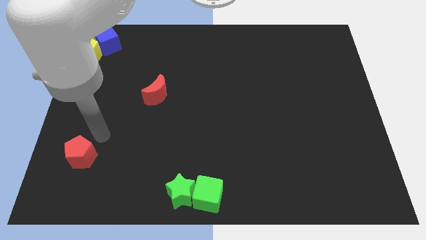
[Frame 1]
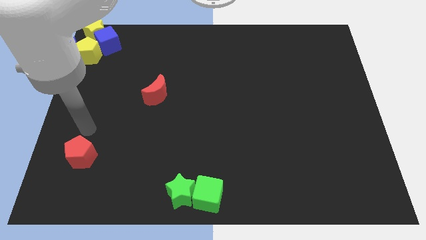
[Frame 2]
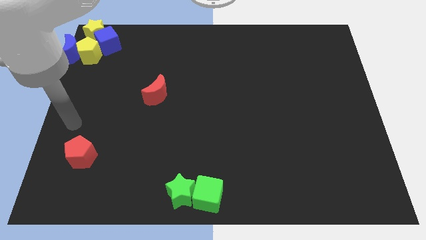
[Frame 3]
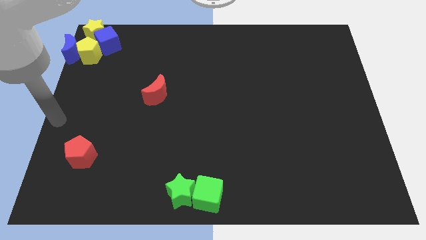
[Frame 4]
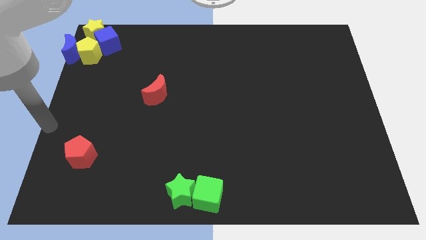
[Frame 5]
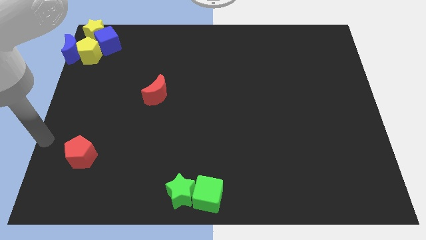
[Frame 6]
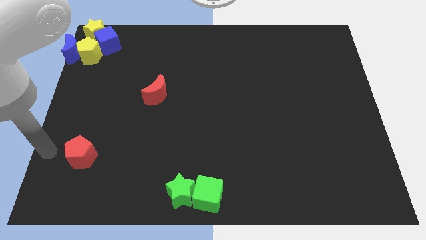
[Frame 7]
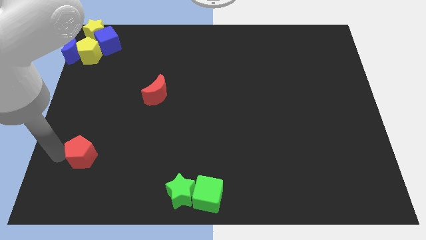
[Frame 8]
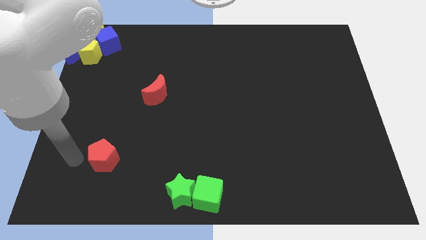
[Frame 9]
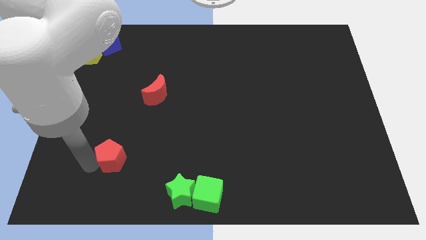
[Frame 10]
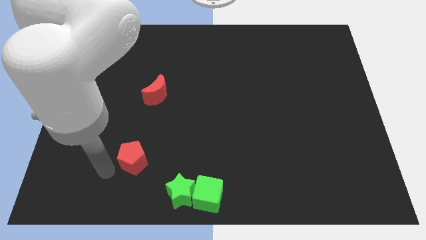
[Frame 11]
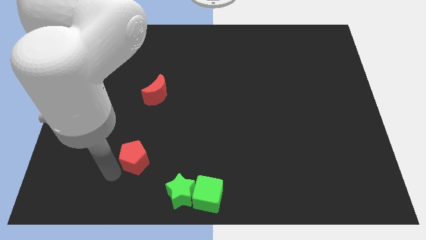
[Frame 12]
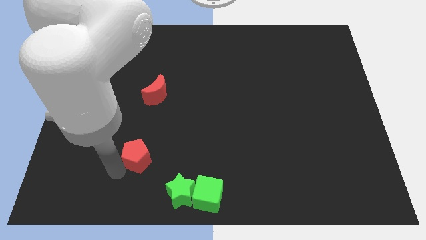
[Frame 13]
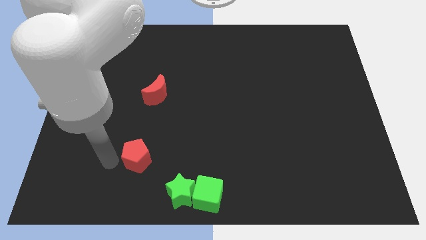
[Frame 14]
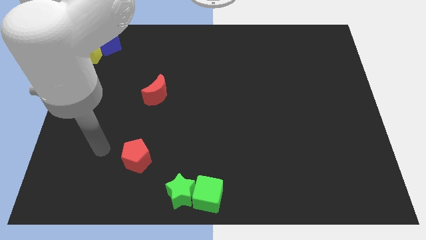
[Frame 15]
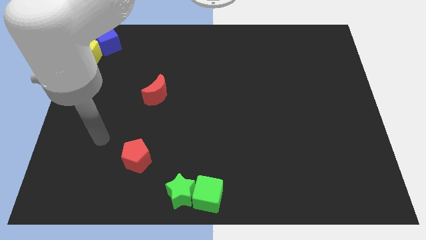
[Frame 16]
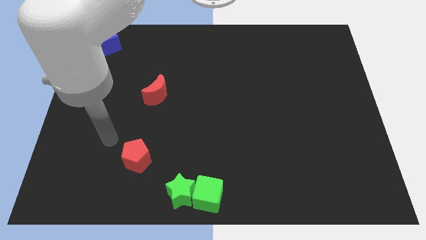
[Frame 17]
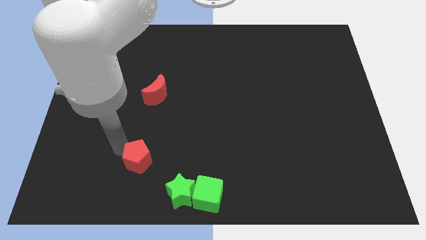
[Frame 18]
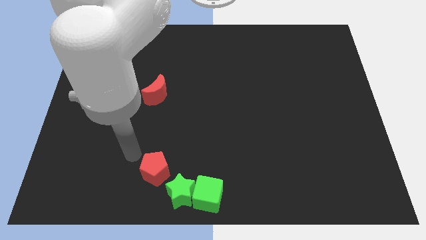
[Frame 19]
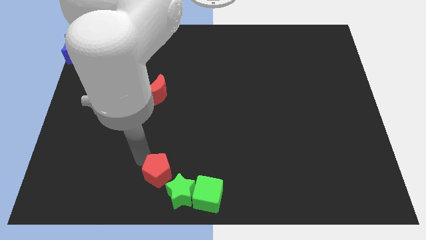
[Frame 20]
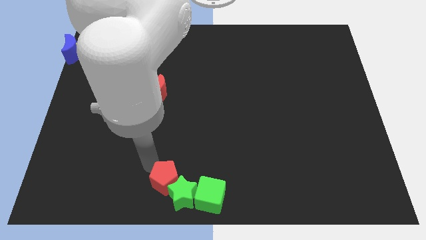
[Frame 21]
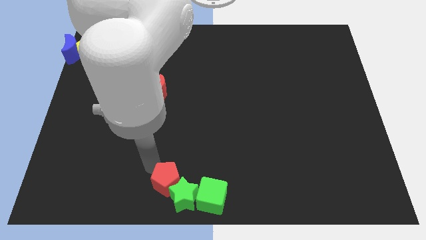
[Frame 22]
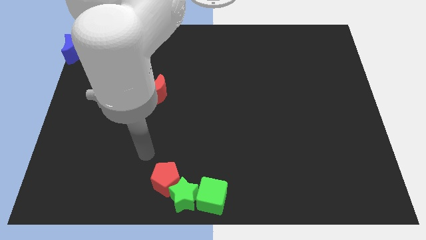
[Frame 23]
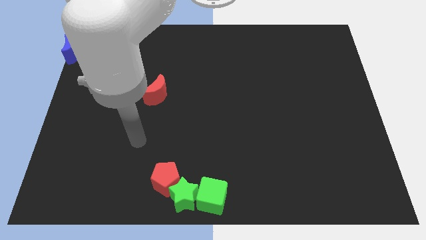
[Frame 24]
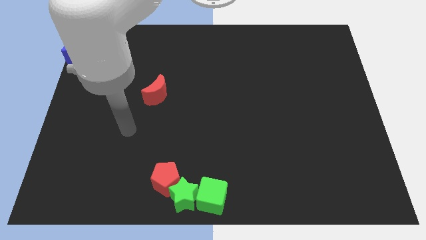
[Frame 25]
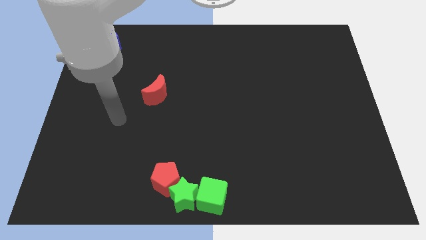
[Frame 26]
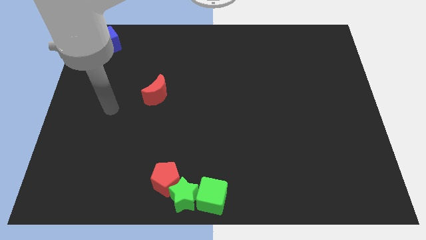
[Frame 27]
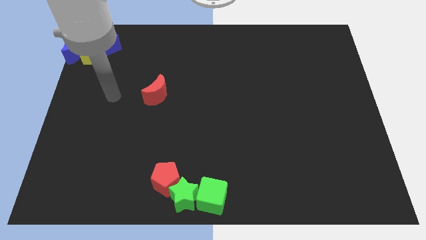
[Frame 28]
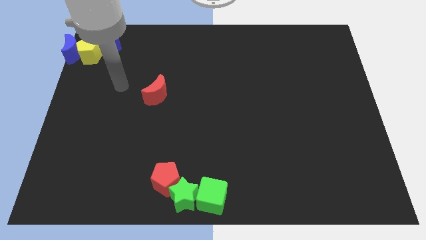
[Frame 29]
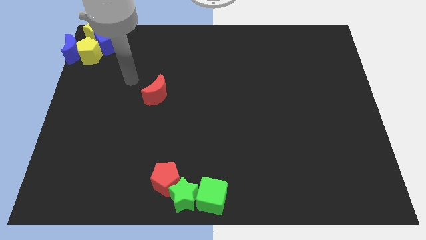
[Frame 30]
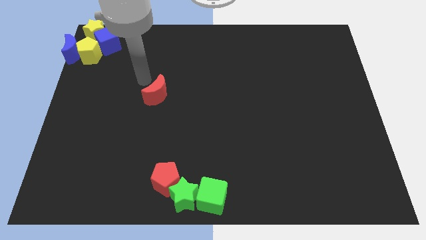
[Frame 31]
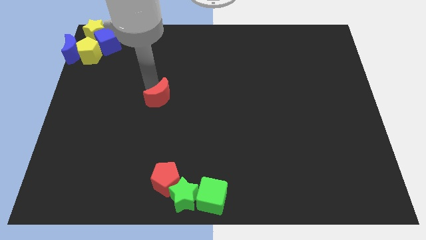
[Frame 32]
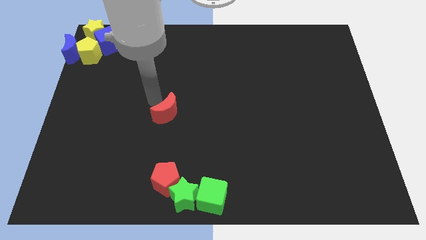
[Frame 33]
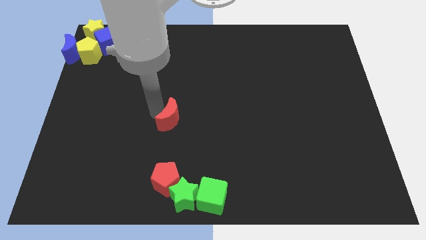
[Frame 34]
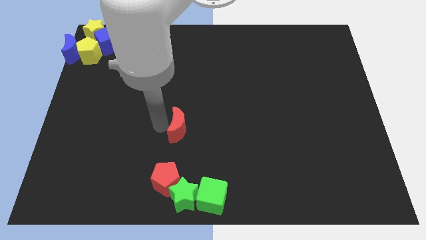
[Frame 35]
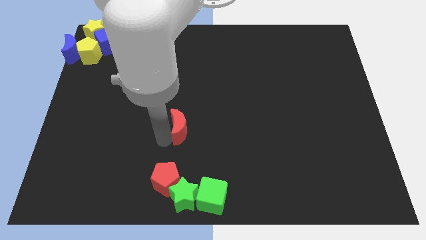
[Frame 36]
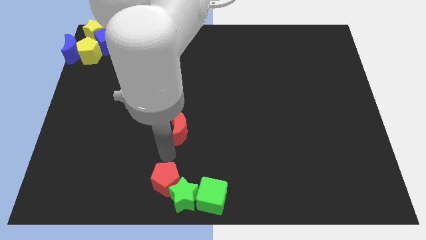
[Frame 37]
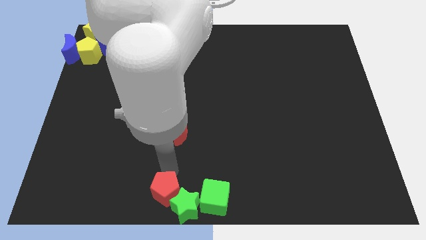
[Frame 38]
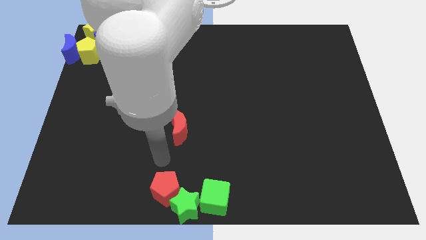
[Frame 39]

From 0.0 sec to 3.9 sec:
push the red pentagon into the green star

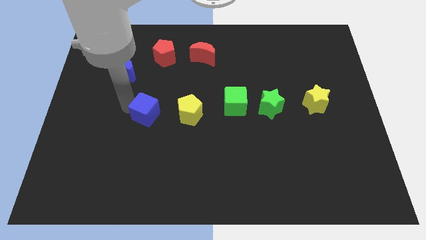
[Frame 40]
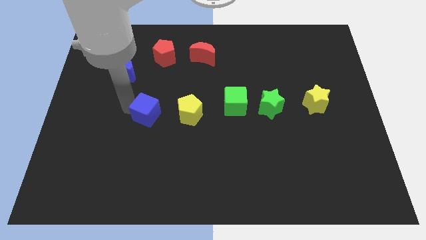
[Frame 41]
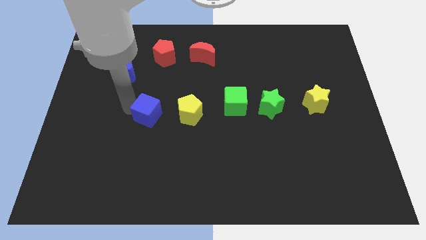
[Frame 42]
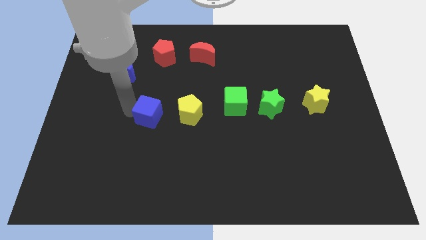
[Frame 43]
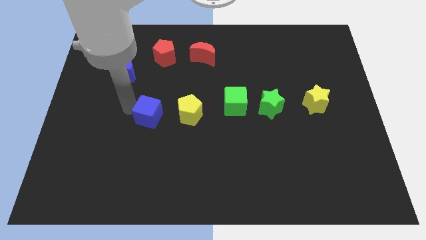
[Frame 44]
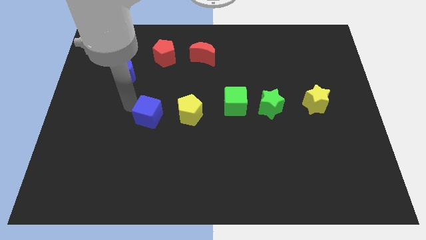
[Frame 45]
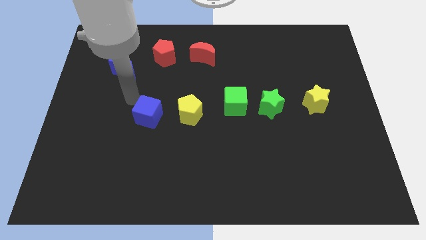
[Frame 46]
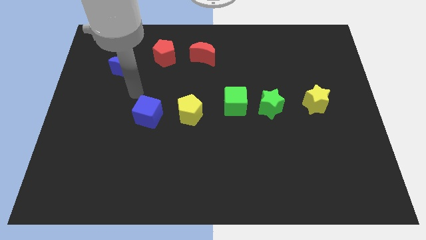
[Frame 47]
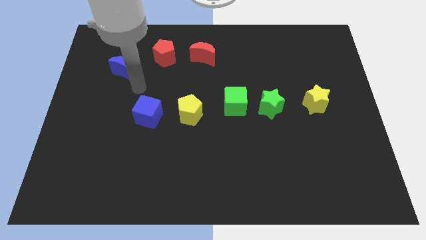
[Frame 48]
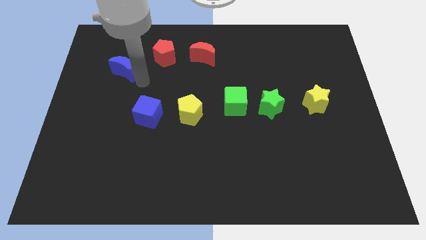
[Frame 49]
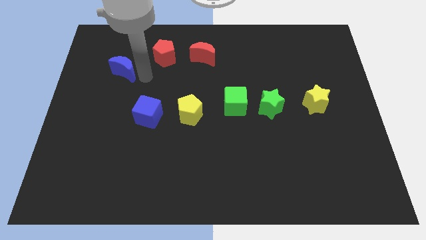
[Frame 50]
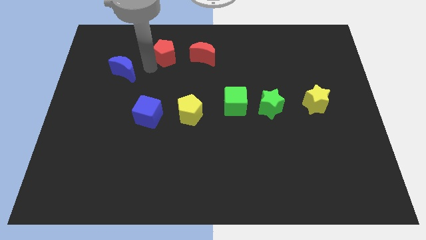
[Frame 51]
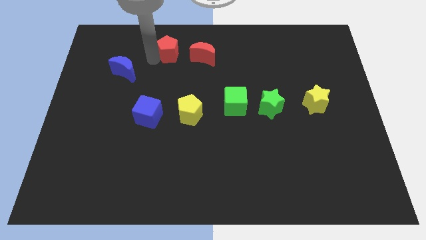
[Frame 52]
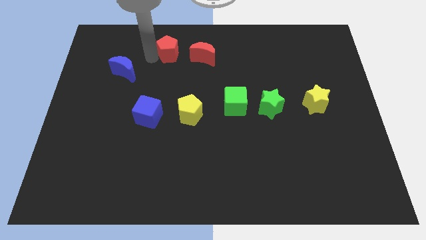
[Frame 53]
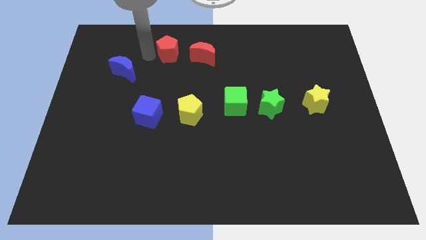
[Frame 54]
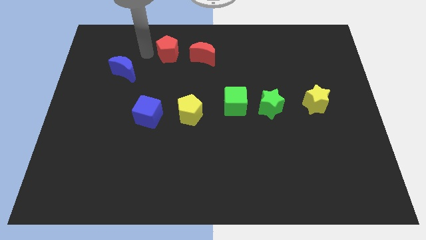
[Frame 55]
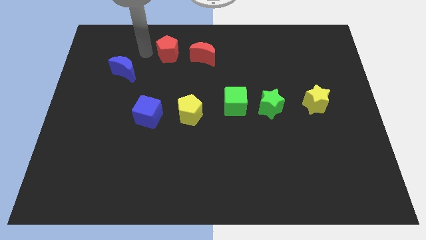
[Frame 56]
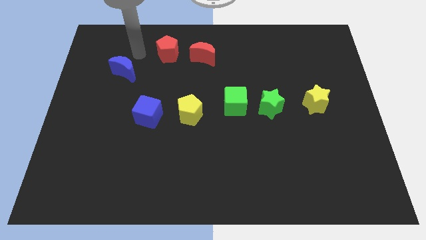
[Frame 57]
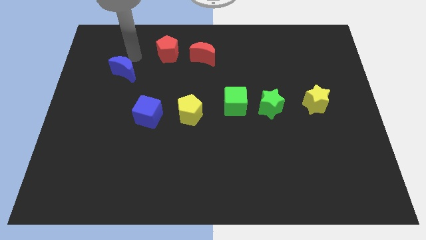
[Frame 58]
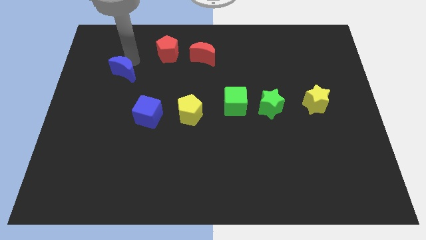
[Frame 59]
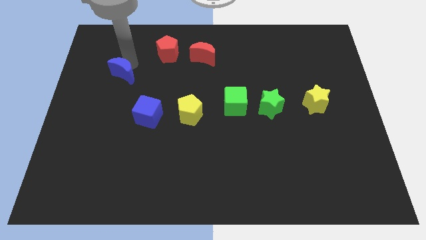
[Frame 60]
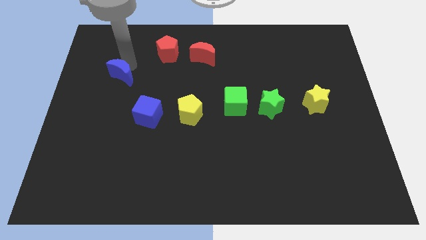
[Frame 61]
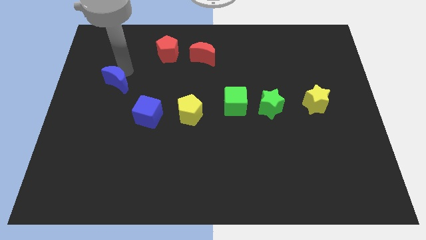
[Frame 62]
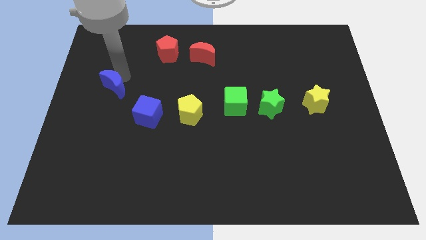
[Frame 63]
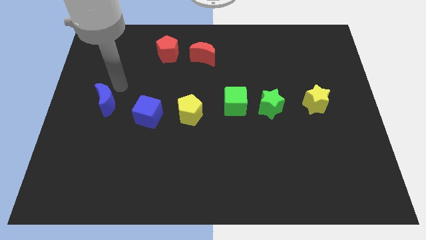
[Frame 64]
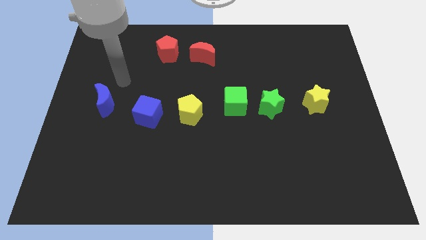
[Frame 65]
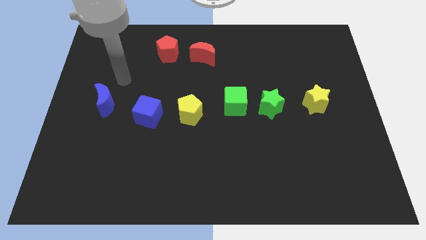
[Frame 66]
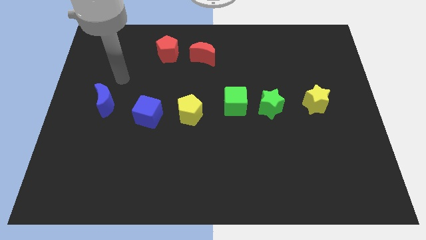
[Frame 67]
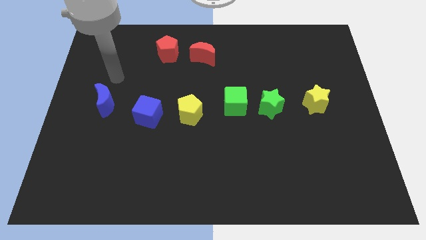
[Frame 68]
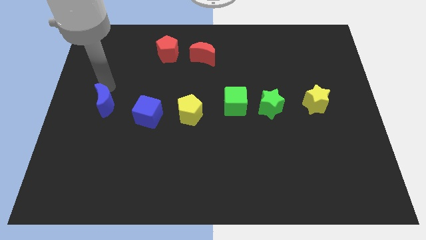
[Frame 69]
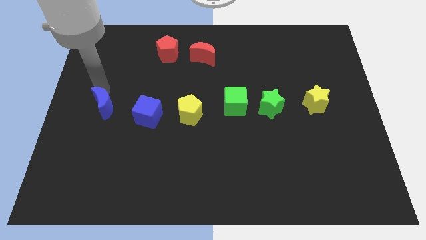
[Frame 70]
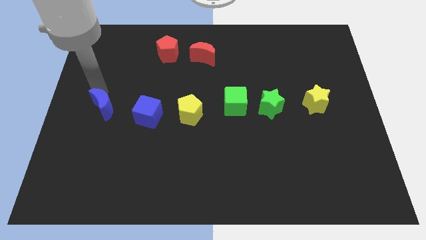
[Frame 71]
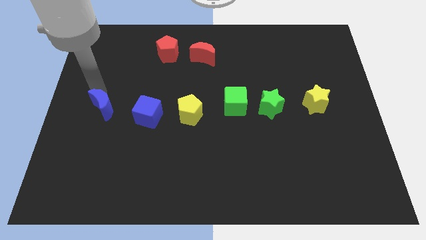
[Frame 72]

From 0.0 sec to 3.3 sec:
move blue moon to the left of blue cube

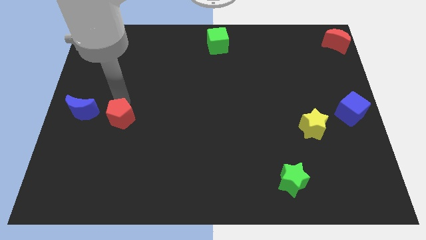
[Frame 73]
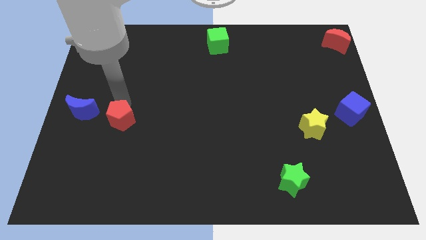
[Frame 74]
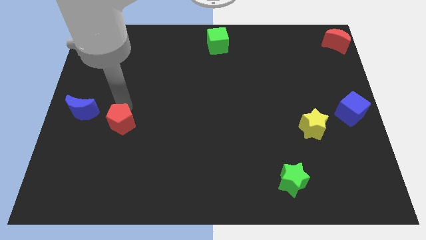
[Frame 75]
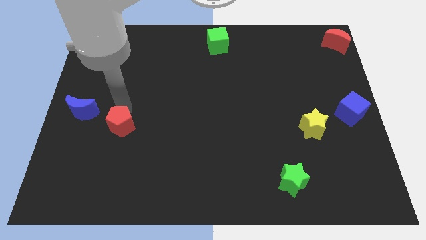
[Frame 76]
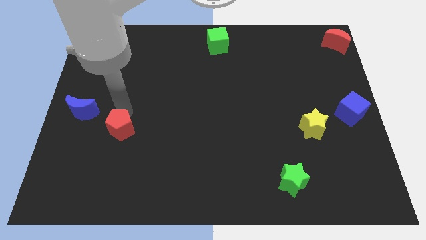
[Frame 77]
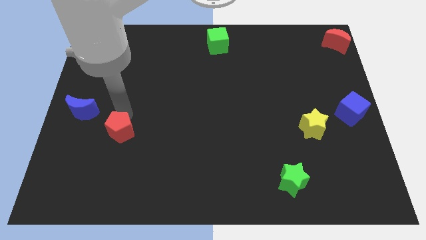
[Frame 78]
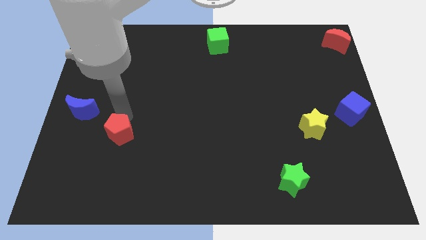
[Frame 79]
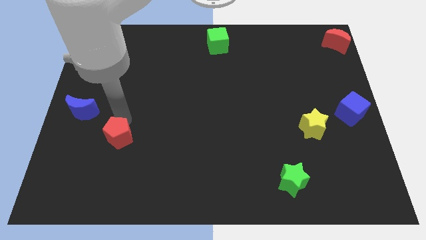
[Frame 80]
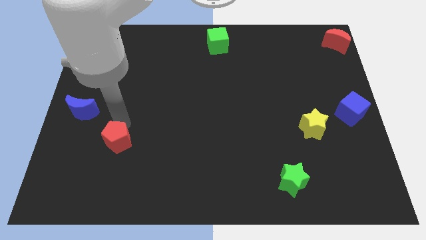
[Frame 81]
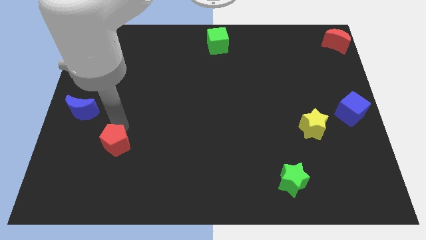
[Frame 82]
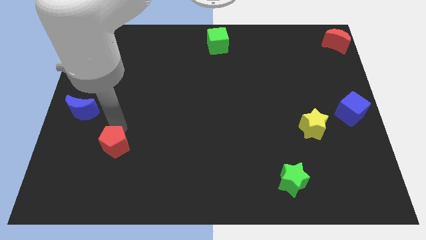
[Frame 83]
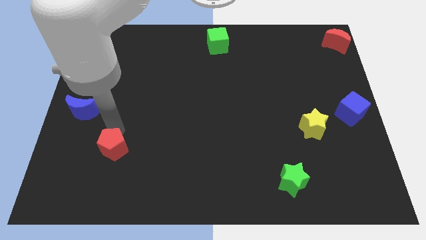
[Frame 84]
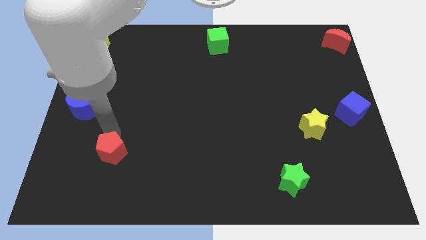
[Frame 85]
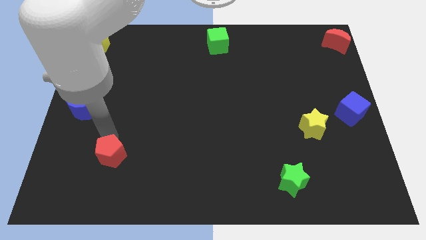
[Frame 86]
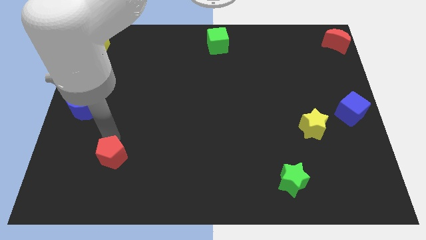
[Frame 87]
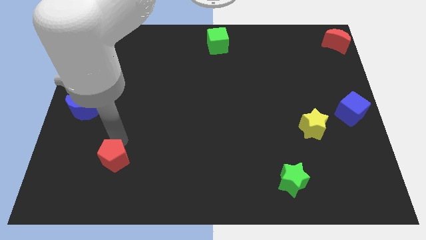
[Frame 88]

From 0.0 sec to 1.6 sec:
push the red pentagon slightly to the bottom of the board
